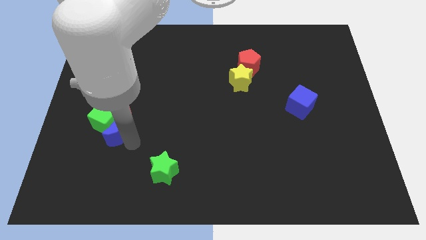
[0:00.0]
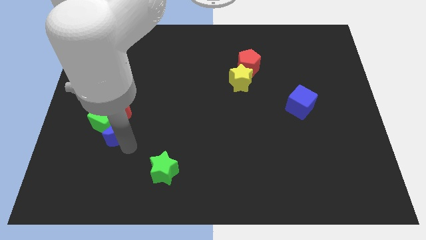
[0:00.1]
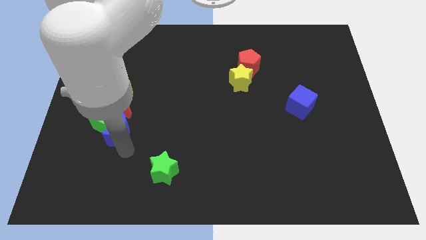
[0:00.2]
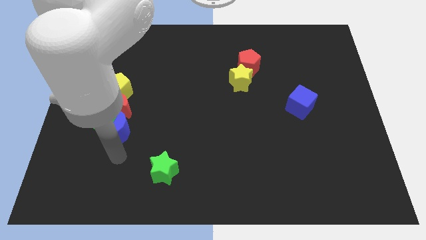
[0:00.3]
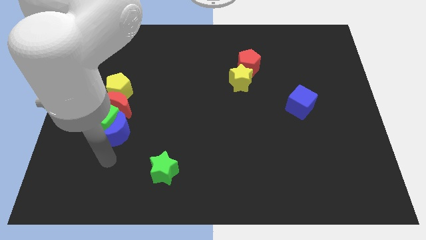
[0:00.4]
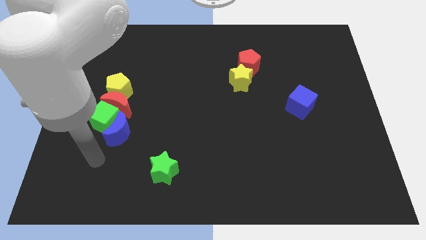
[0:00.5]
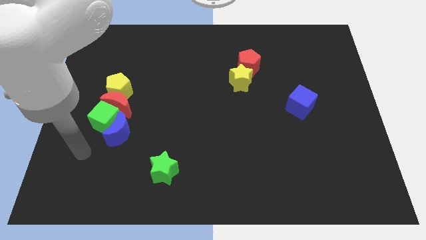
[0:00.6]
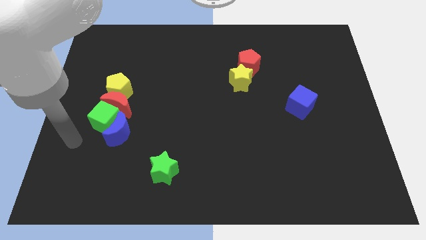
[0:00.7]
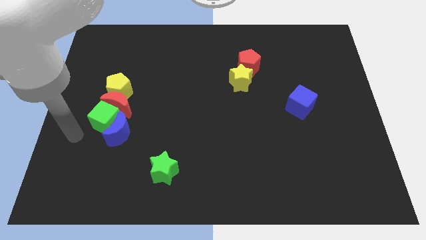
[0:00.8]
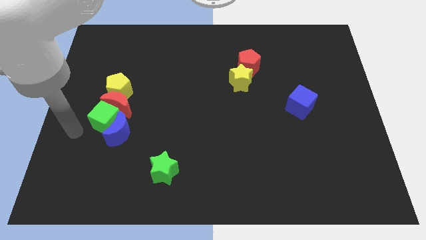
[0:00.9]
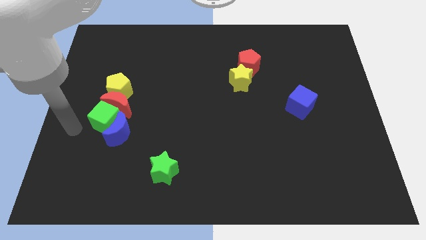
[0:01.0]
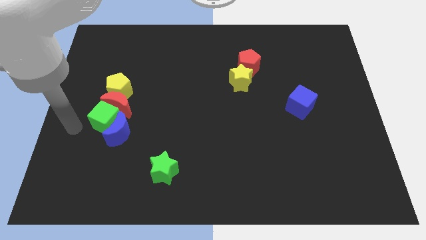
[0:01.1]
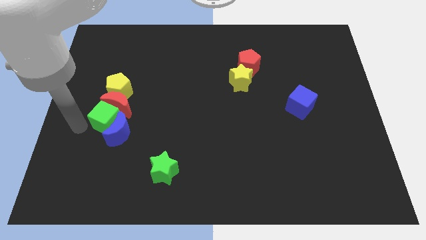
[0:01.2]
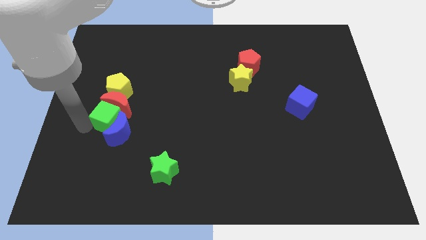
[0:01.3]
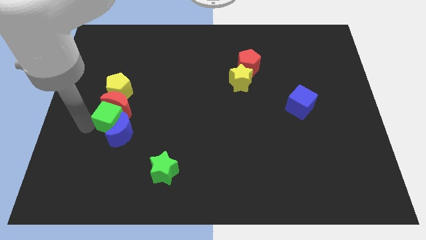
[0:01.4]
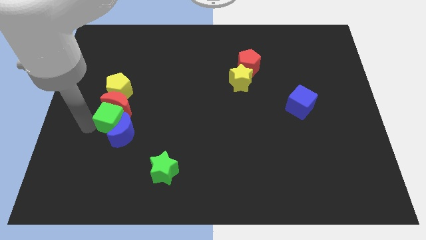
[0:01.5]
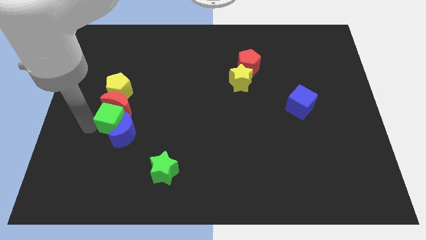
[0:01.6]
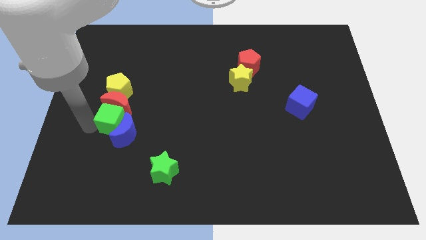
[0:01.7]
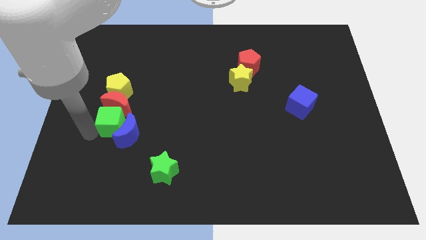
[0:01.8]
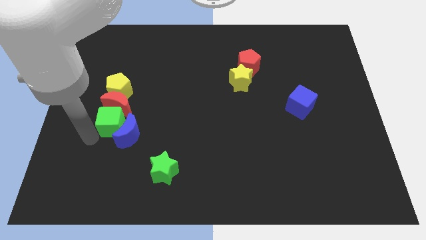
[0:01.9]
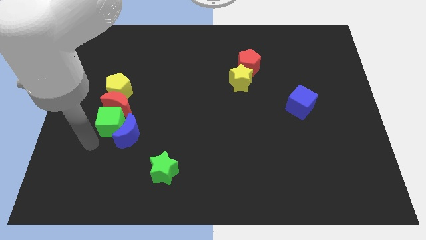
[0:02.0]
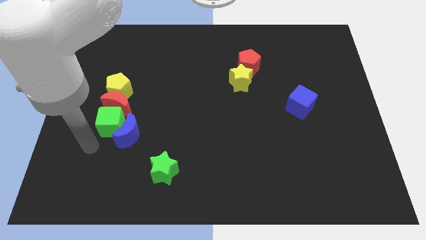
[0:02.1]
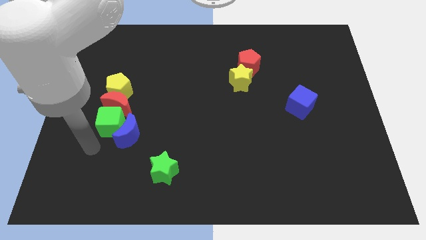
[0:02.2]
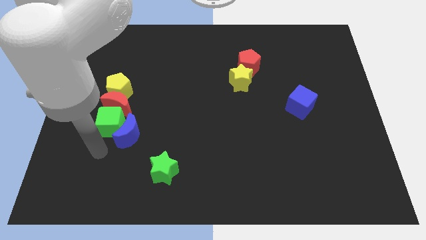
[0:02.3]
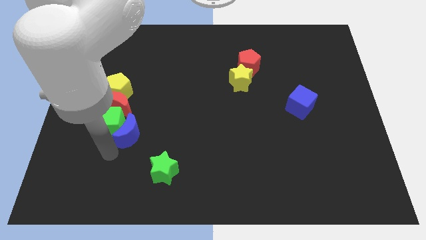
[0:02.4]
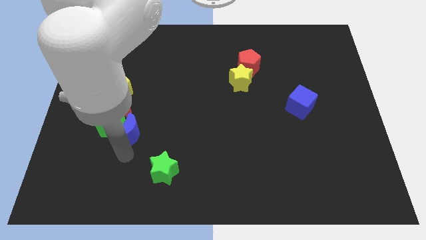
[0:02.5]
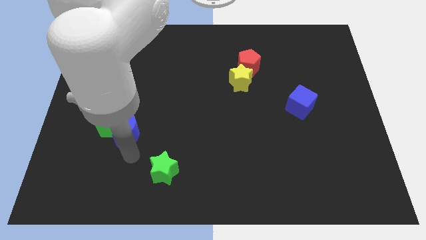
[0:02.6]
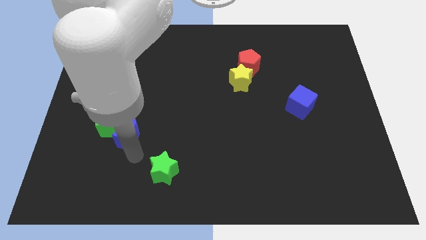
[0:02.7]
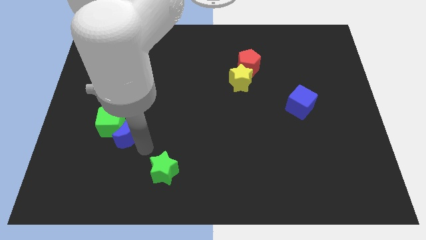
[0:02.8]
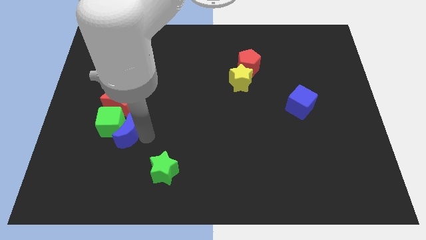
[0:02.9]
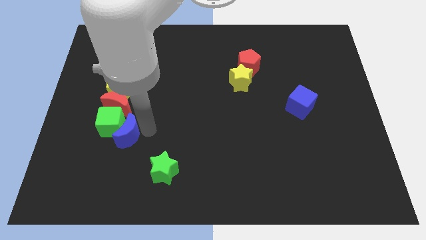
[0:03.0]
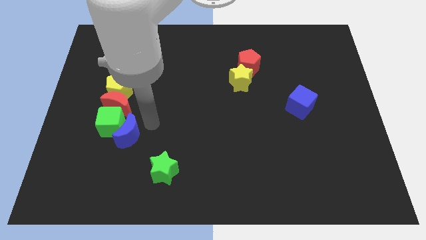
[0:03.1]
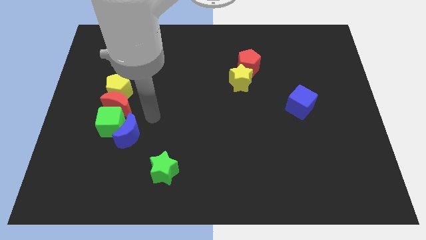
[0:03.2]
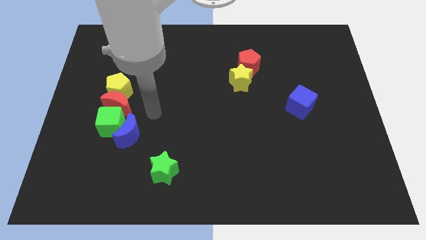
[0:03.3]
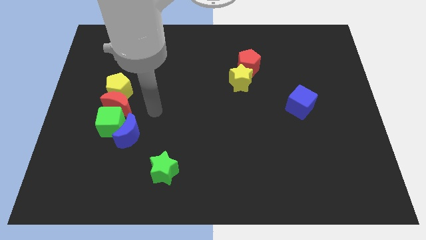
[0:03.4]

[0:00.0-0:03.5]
move the blue moon close to green cube

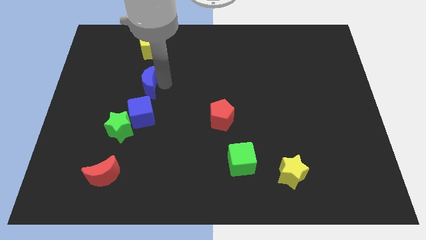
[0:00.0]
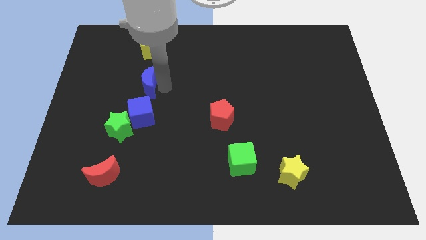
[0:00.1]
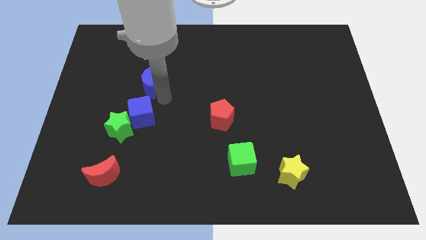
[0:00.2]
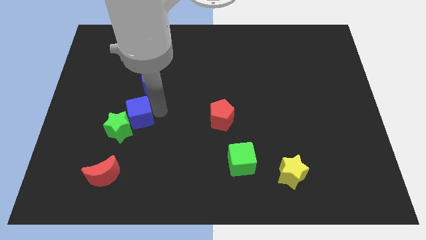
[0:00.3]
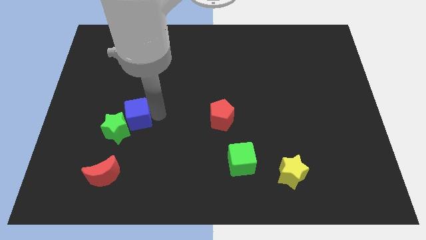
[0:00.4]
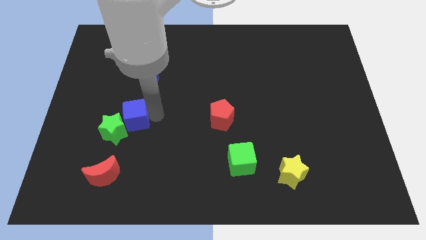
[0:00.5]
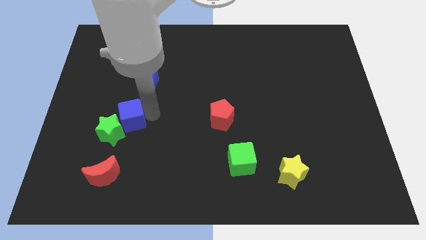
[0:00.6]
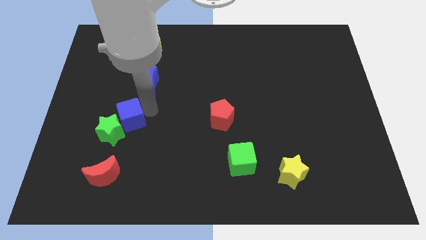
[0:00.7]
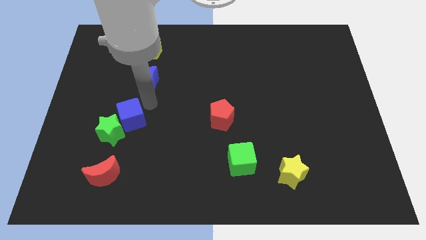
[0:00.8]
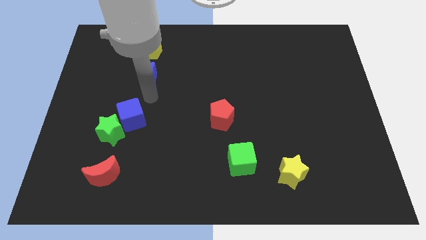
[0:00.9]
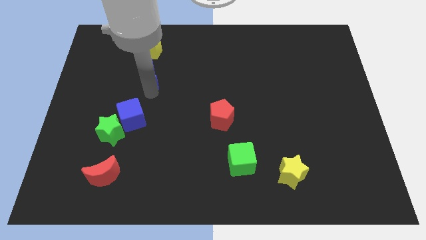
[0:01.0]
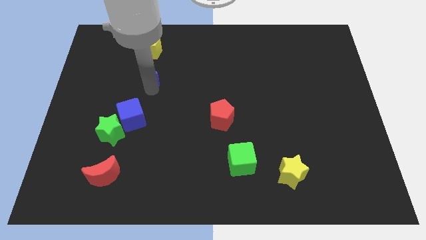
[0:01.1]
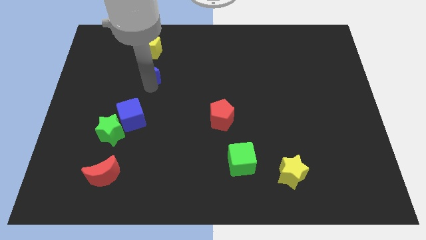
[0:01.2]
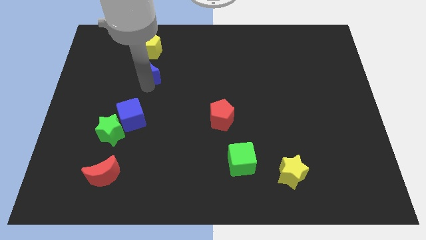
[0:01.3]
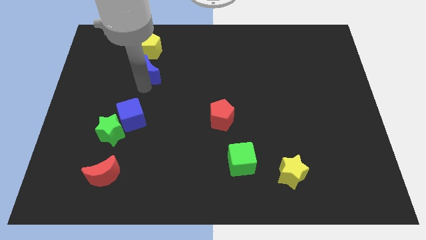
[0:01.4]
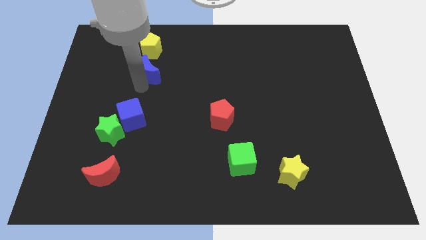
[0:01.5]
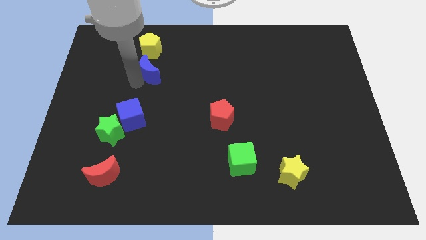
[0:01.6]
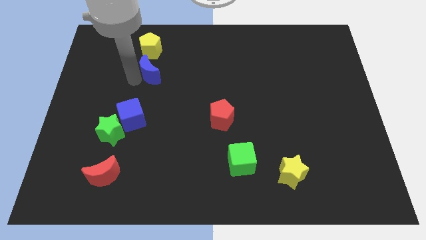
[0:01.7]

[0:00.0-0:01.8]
push the blue cube into the green star

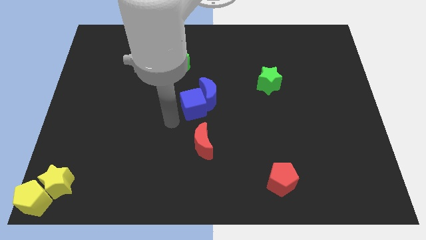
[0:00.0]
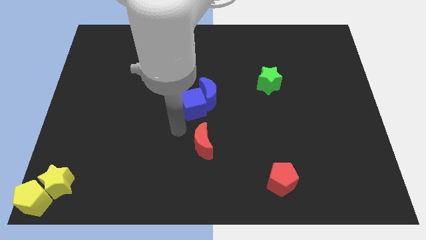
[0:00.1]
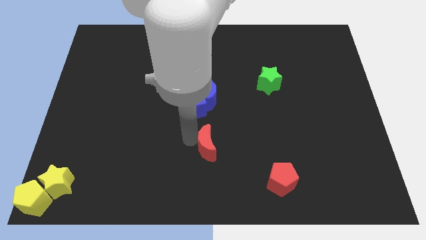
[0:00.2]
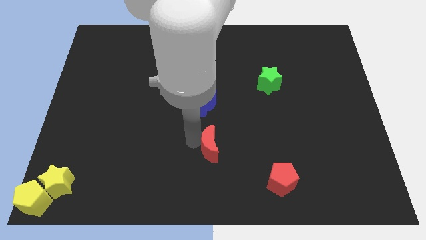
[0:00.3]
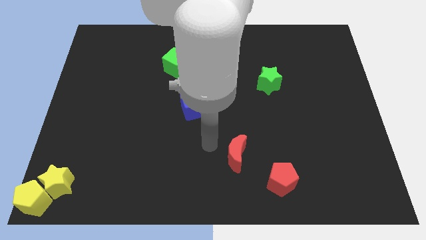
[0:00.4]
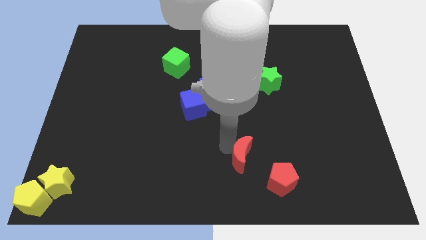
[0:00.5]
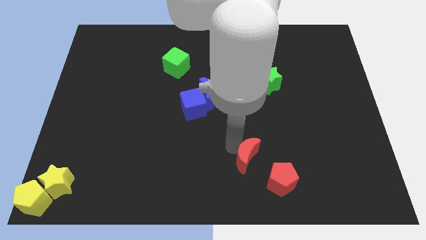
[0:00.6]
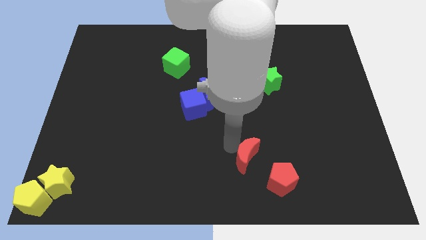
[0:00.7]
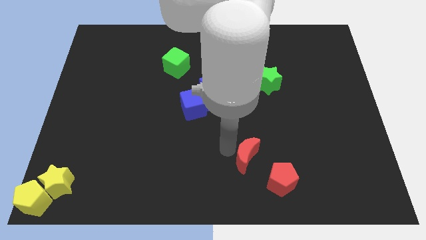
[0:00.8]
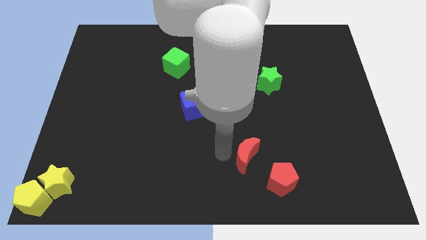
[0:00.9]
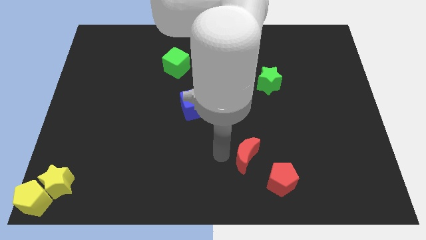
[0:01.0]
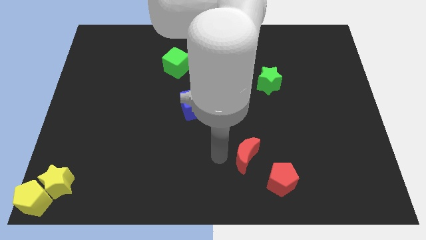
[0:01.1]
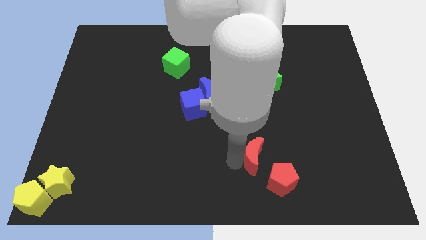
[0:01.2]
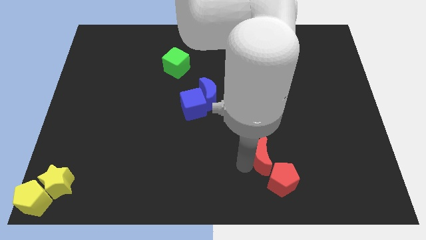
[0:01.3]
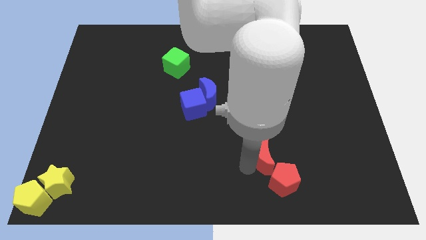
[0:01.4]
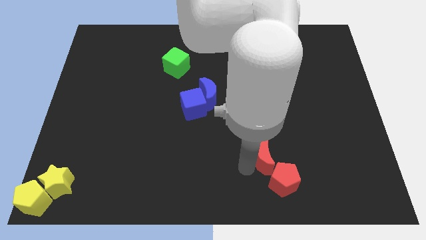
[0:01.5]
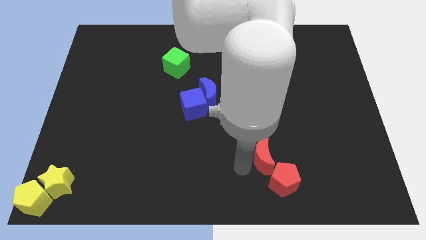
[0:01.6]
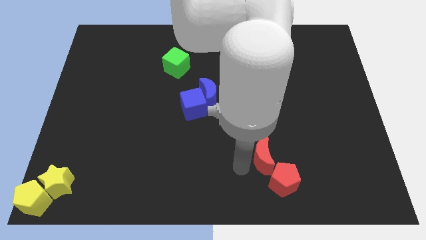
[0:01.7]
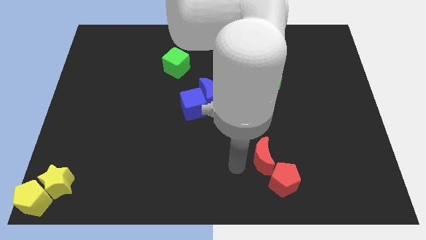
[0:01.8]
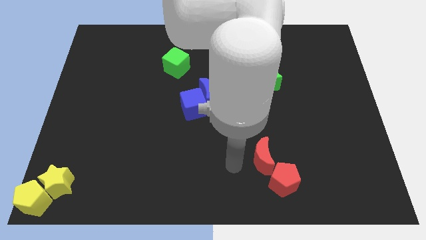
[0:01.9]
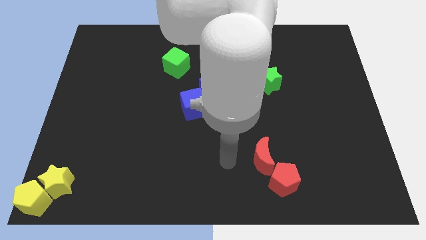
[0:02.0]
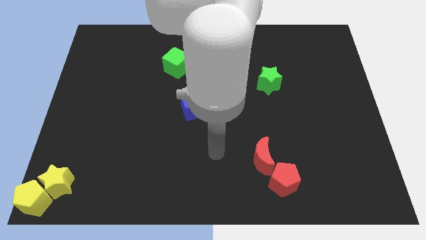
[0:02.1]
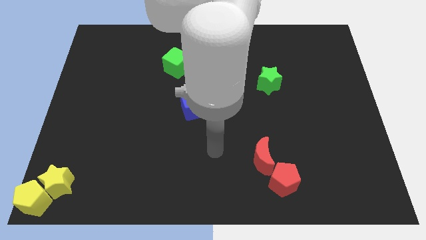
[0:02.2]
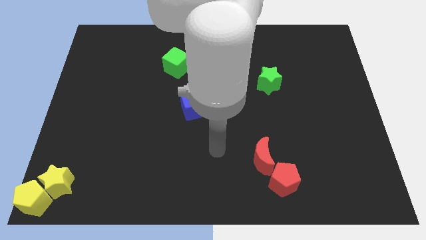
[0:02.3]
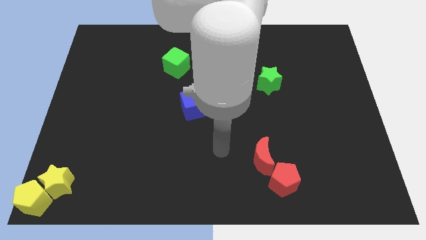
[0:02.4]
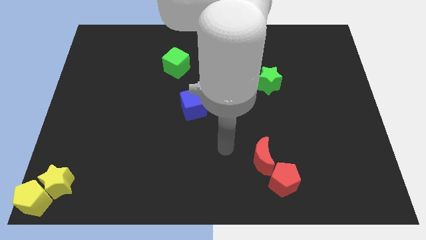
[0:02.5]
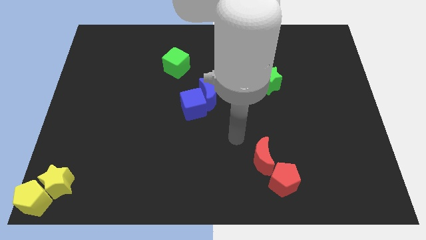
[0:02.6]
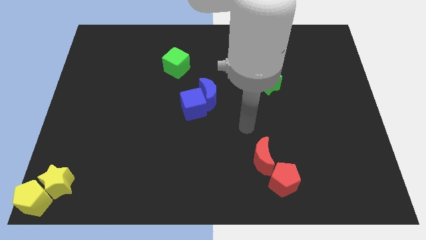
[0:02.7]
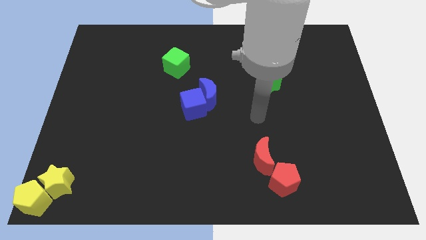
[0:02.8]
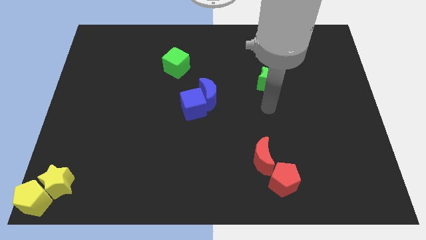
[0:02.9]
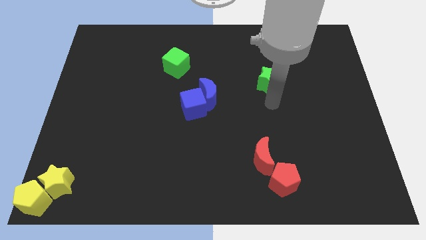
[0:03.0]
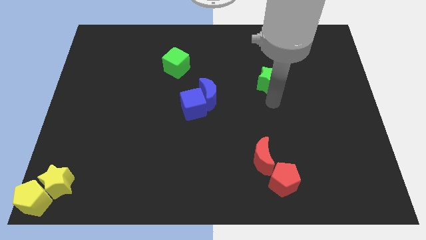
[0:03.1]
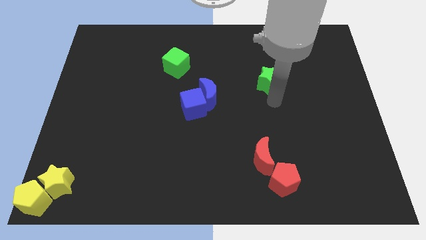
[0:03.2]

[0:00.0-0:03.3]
move the red crescent into the red pentagon

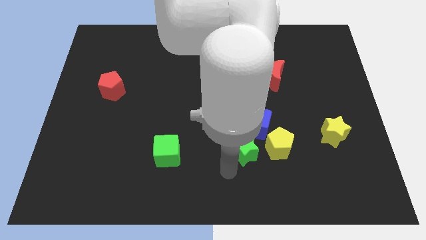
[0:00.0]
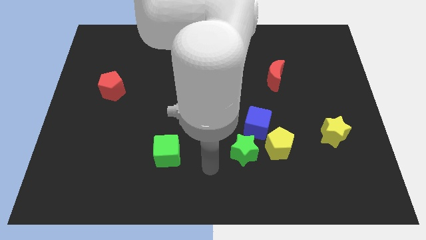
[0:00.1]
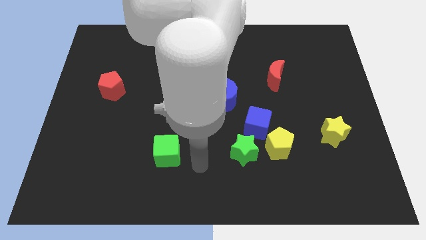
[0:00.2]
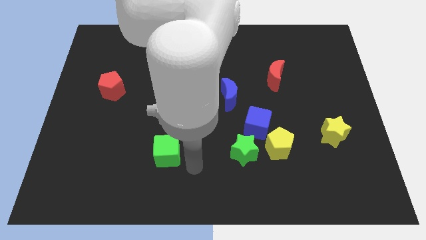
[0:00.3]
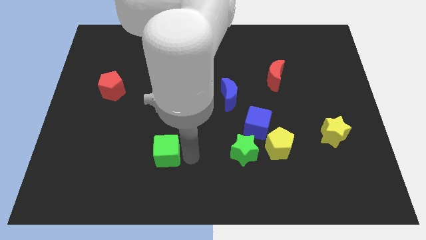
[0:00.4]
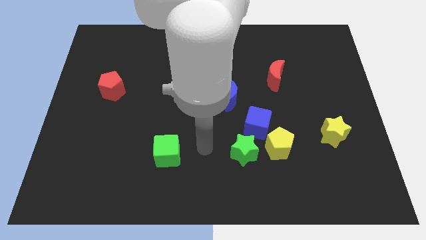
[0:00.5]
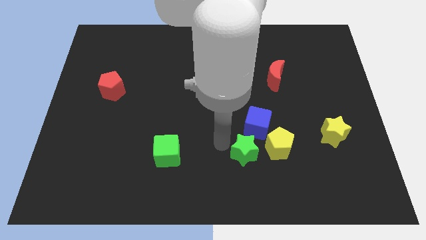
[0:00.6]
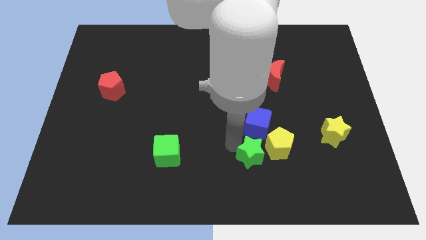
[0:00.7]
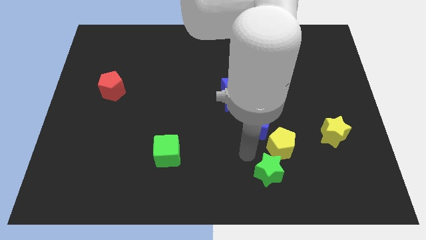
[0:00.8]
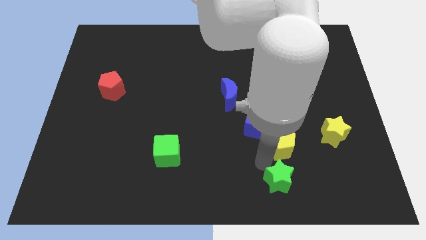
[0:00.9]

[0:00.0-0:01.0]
put green star below yellow pentagon
